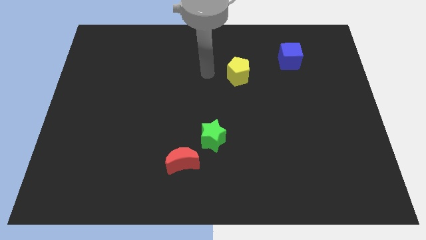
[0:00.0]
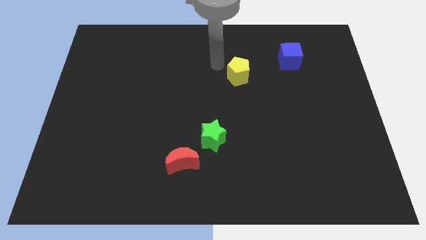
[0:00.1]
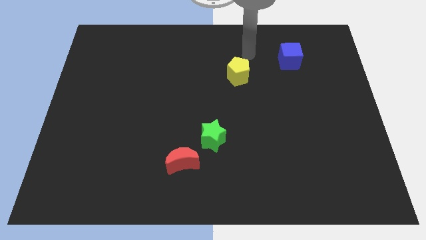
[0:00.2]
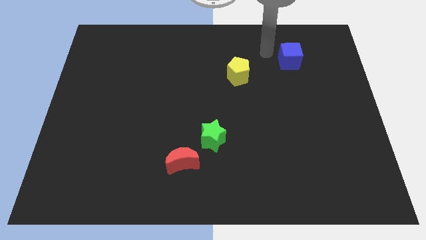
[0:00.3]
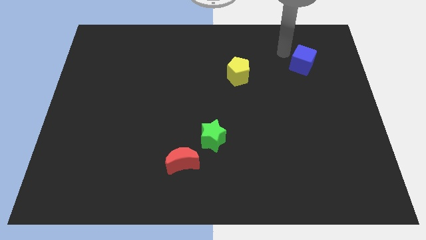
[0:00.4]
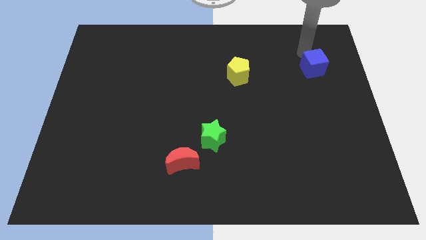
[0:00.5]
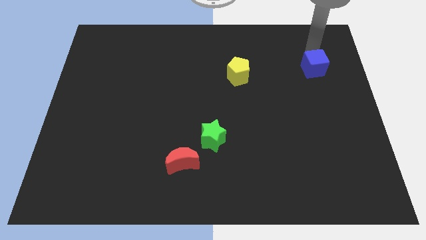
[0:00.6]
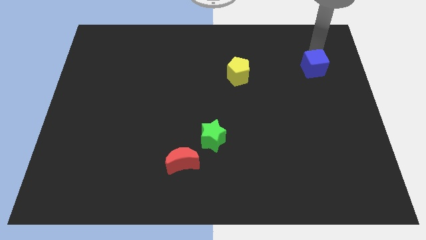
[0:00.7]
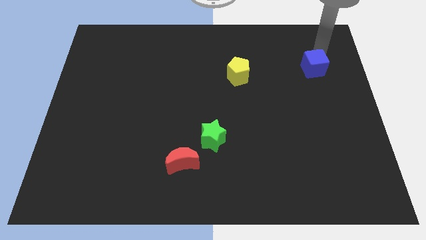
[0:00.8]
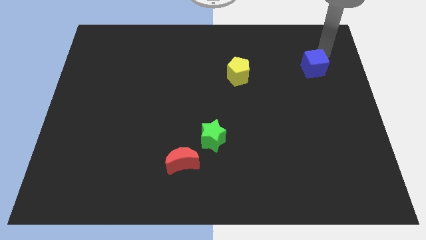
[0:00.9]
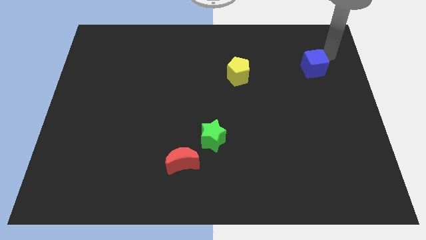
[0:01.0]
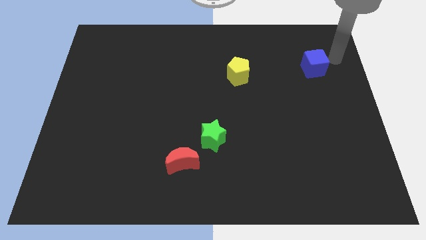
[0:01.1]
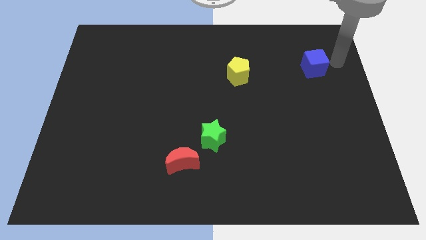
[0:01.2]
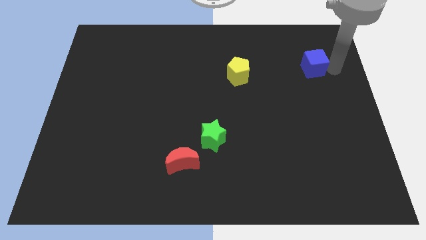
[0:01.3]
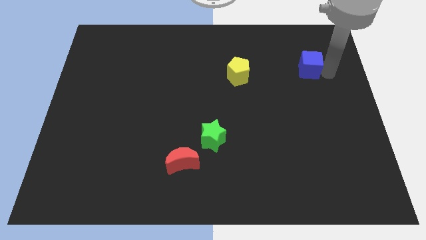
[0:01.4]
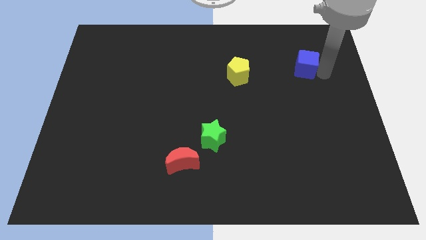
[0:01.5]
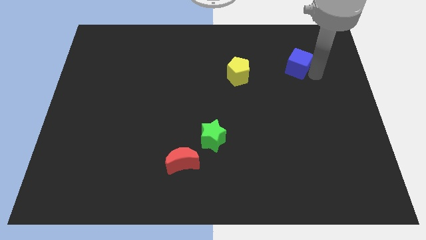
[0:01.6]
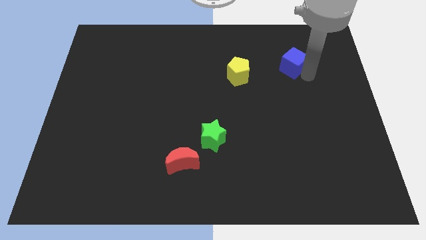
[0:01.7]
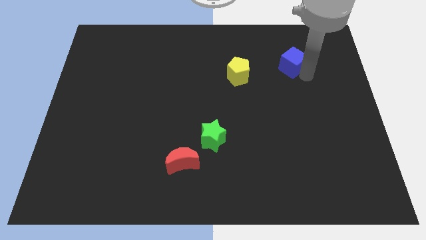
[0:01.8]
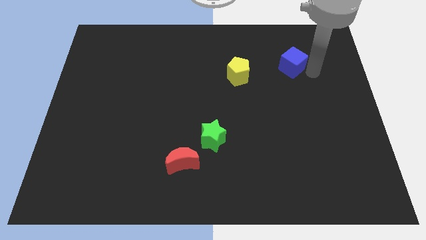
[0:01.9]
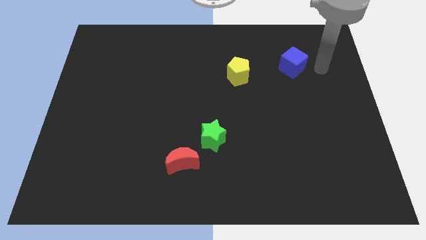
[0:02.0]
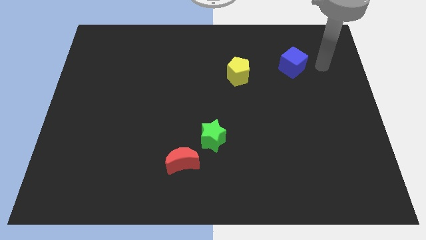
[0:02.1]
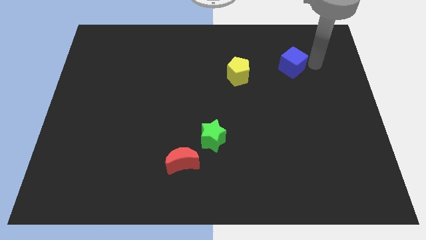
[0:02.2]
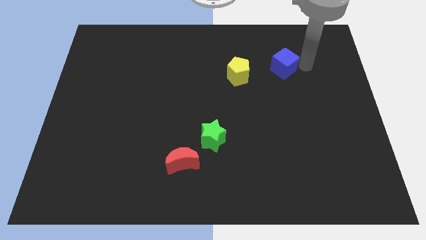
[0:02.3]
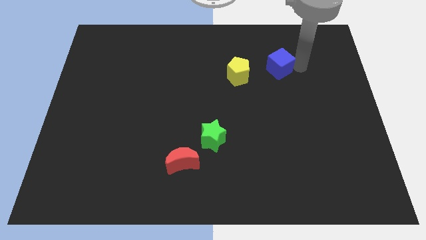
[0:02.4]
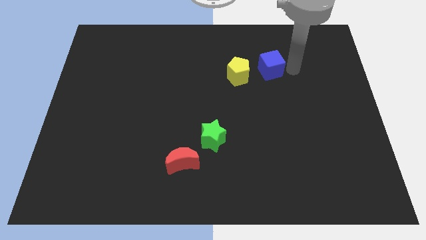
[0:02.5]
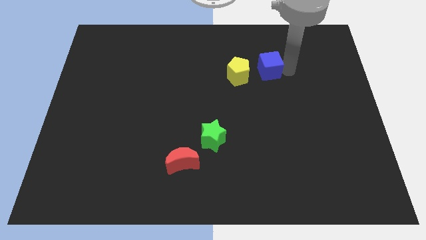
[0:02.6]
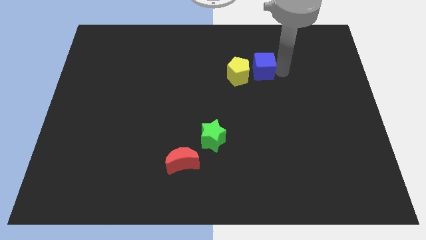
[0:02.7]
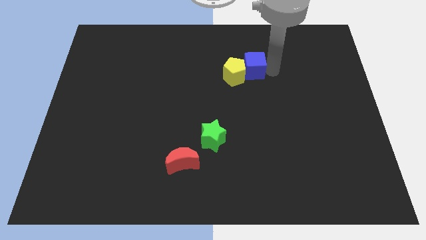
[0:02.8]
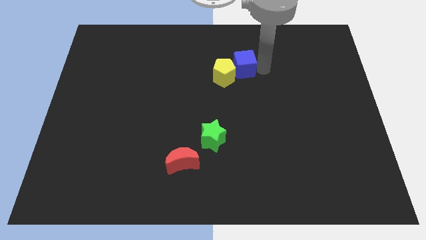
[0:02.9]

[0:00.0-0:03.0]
move the cube towards the yellow block

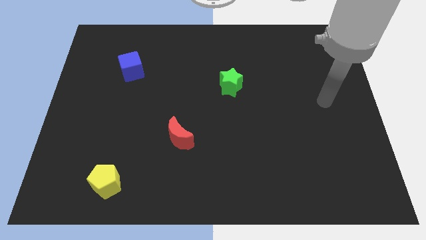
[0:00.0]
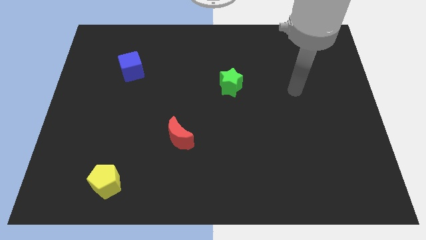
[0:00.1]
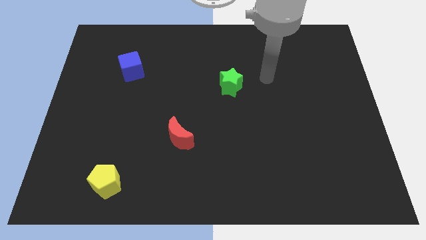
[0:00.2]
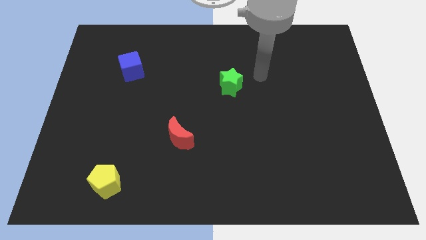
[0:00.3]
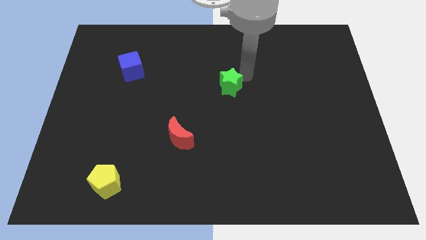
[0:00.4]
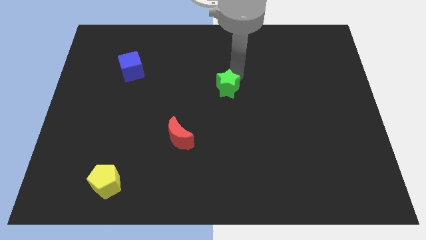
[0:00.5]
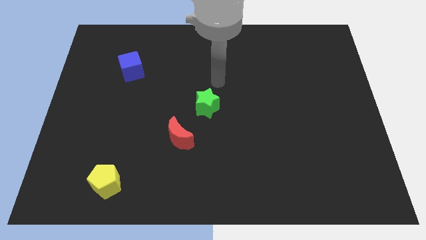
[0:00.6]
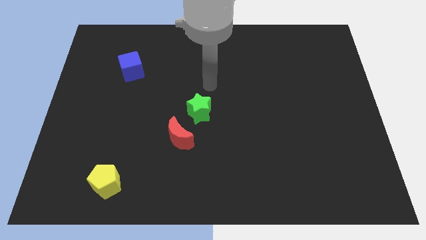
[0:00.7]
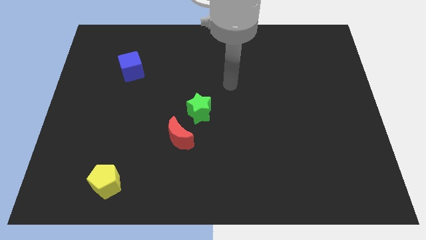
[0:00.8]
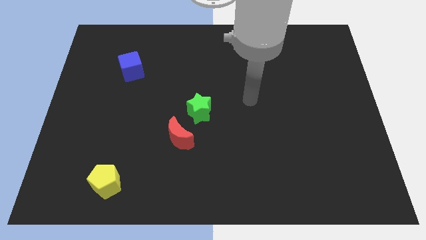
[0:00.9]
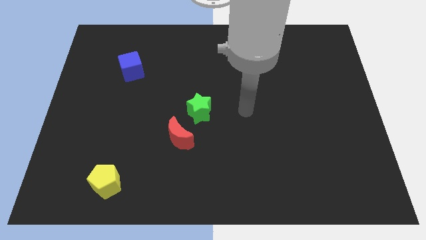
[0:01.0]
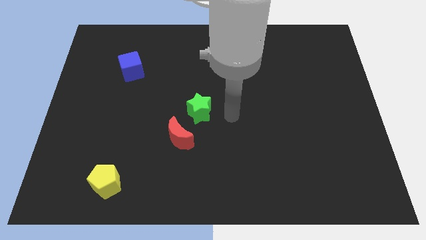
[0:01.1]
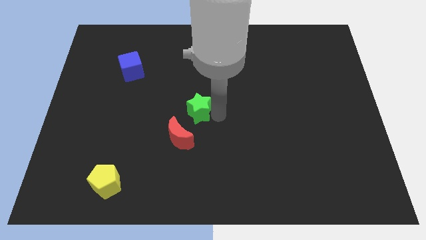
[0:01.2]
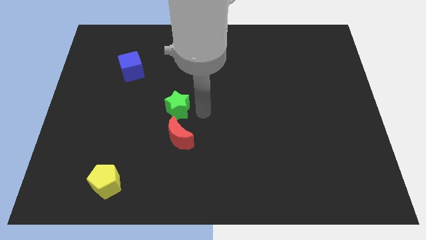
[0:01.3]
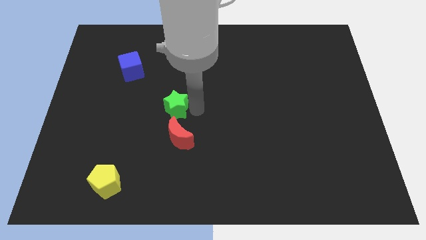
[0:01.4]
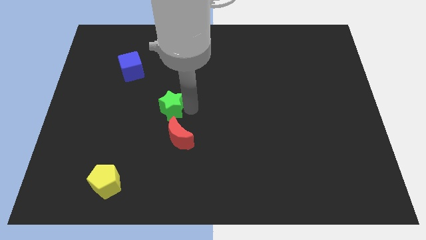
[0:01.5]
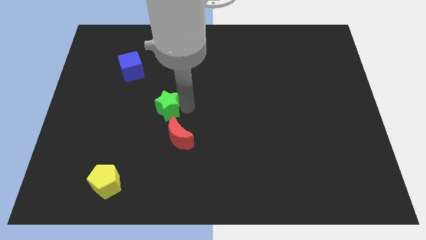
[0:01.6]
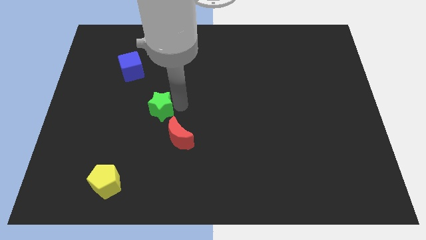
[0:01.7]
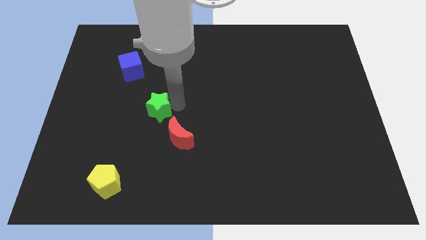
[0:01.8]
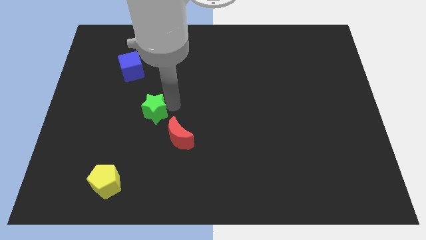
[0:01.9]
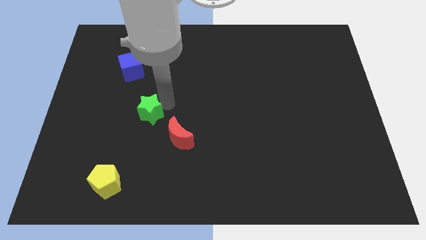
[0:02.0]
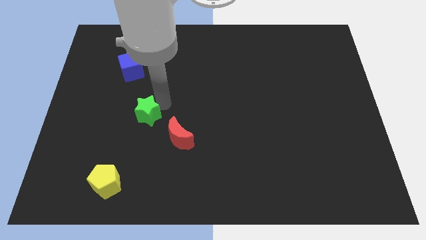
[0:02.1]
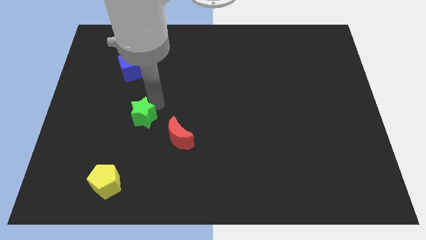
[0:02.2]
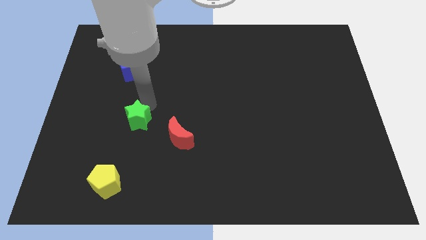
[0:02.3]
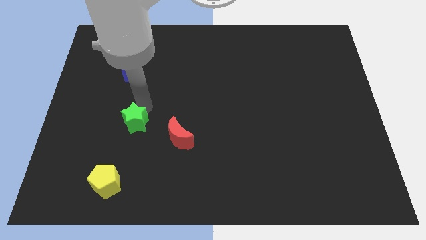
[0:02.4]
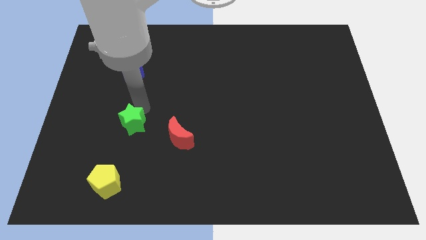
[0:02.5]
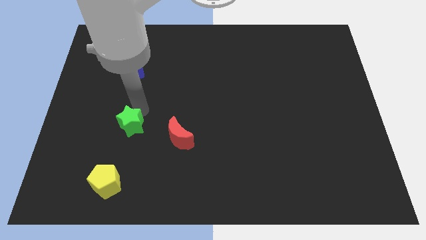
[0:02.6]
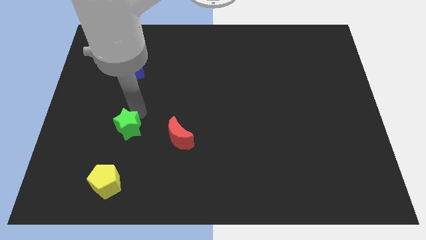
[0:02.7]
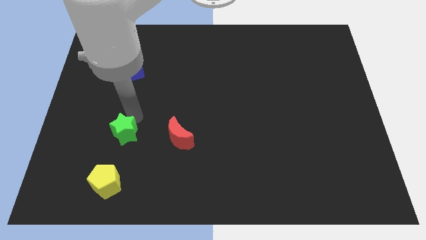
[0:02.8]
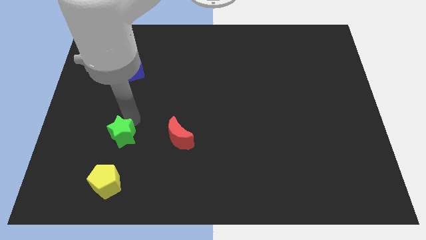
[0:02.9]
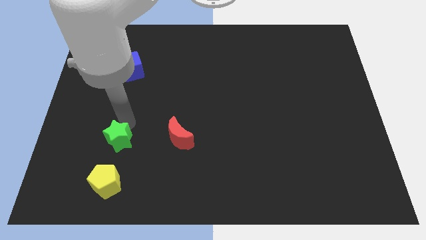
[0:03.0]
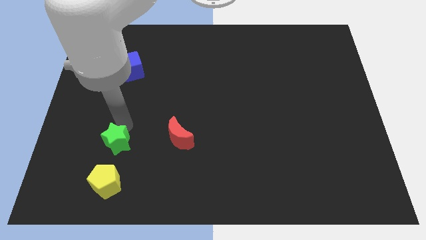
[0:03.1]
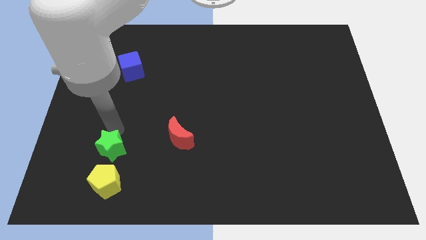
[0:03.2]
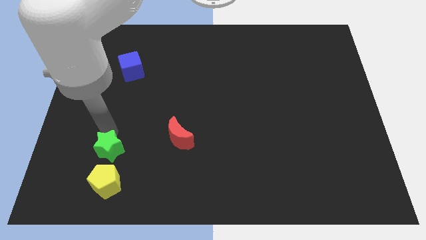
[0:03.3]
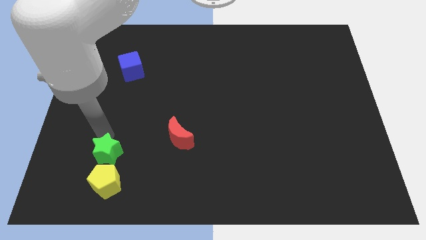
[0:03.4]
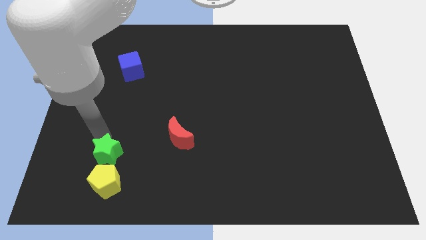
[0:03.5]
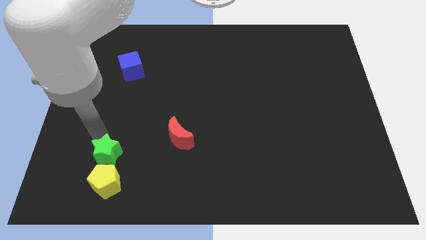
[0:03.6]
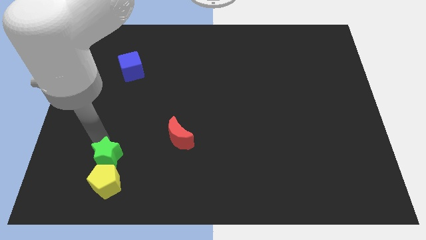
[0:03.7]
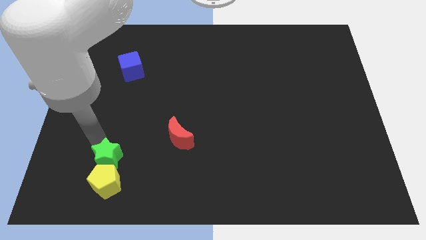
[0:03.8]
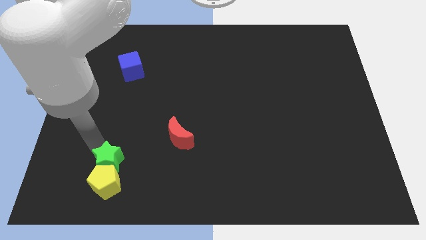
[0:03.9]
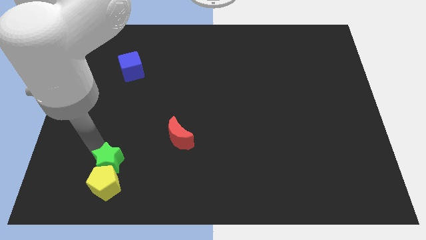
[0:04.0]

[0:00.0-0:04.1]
push the star close to the pentagon

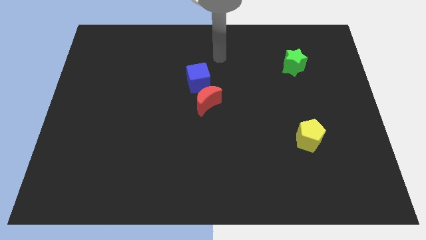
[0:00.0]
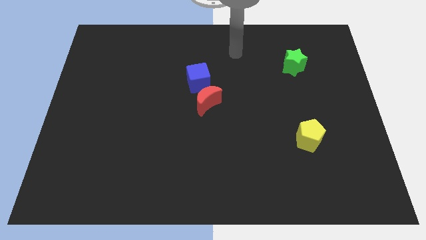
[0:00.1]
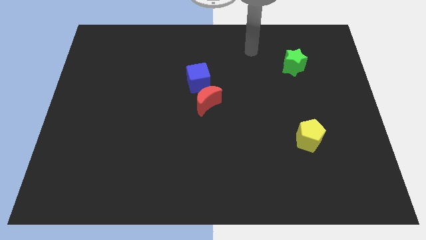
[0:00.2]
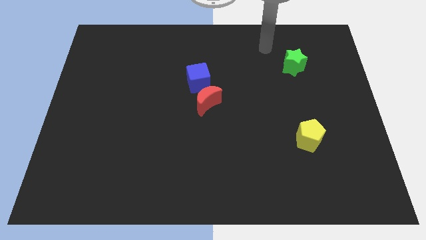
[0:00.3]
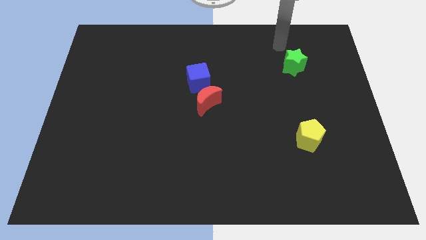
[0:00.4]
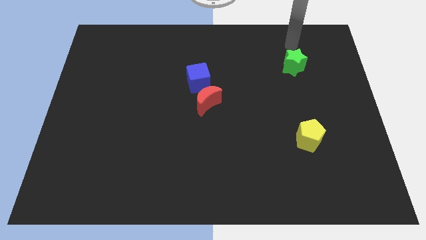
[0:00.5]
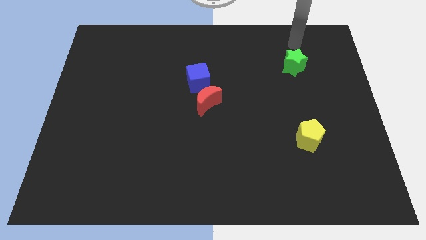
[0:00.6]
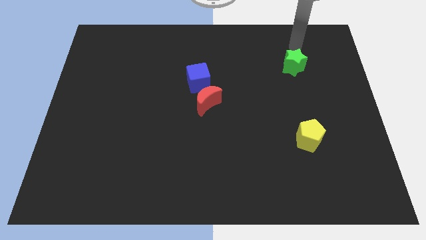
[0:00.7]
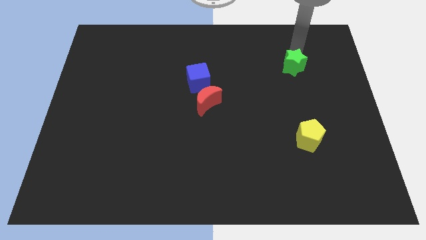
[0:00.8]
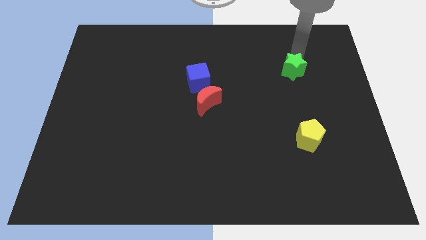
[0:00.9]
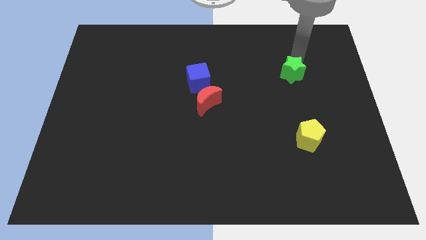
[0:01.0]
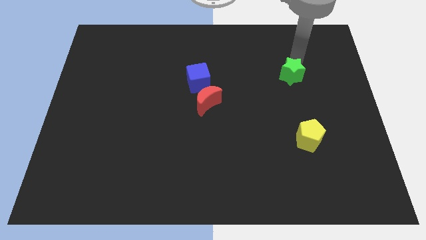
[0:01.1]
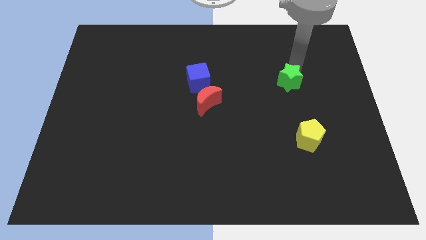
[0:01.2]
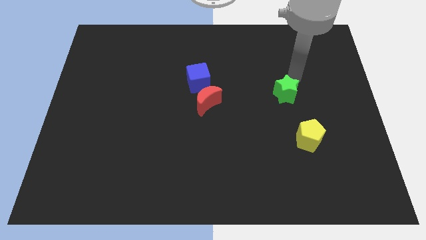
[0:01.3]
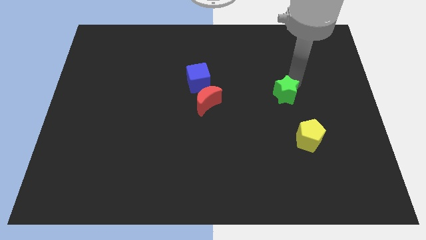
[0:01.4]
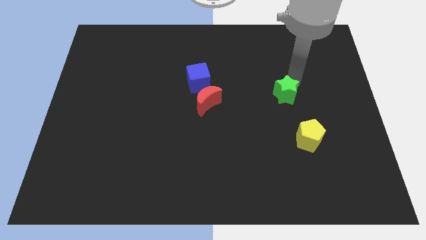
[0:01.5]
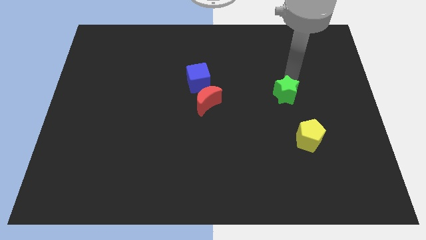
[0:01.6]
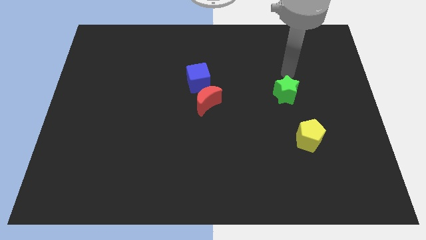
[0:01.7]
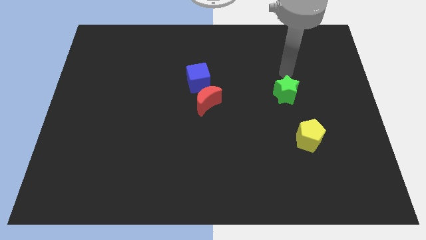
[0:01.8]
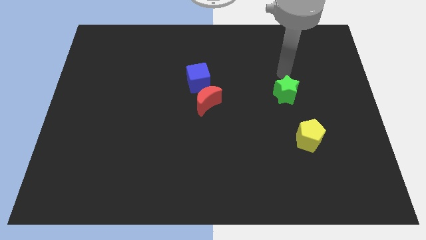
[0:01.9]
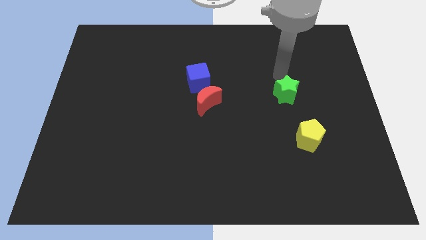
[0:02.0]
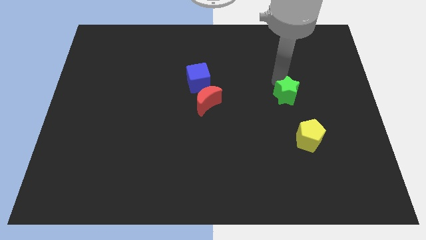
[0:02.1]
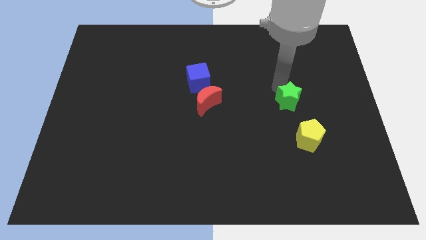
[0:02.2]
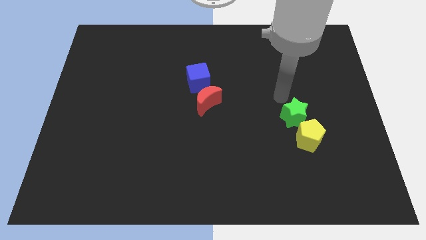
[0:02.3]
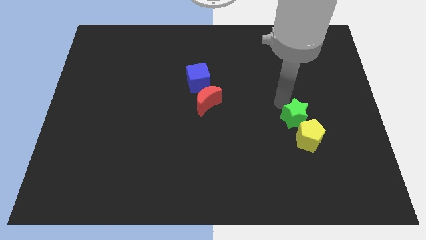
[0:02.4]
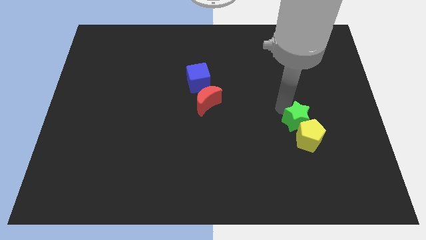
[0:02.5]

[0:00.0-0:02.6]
move the green star towards the yellow pentagon
